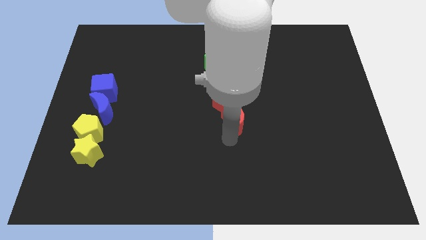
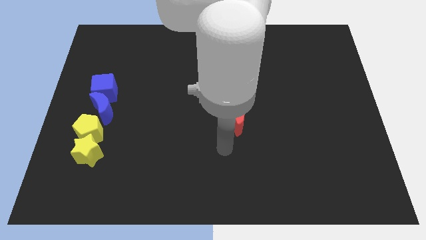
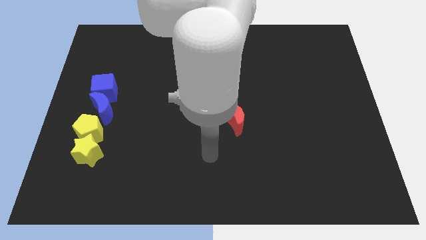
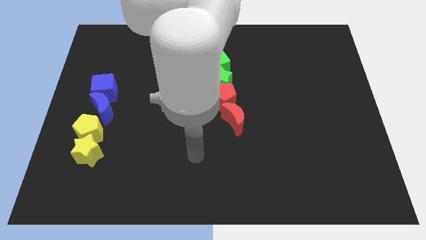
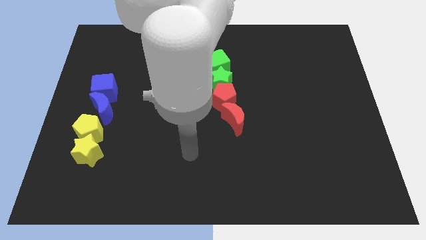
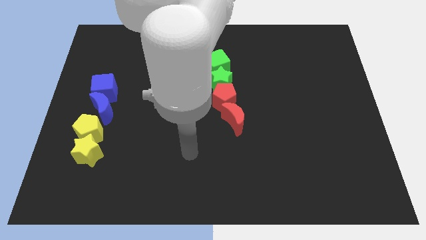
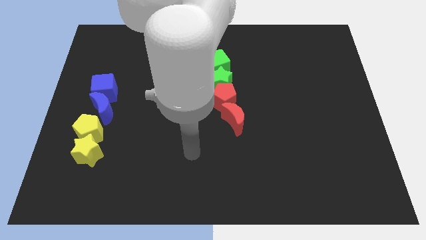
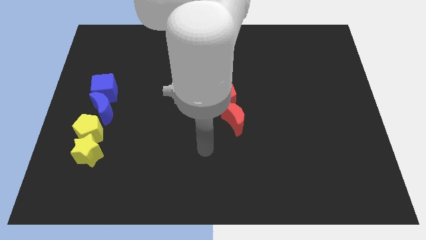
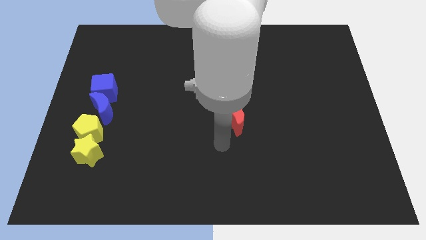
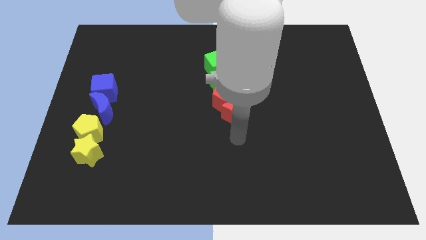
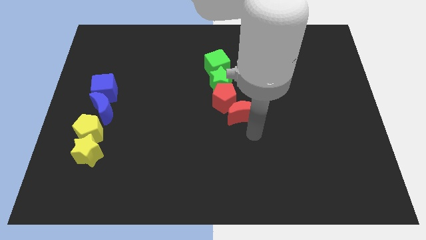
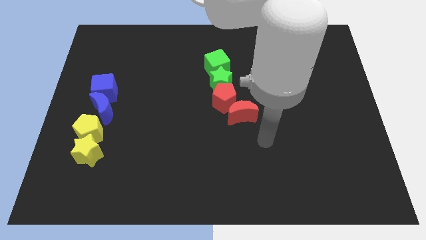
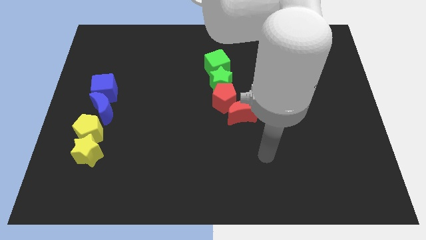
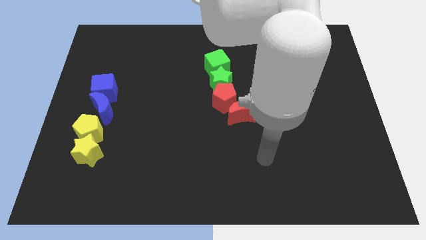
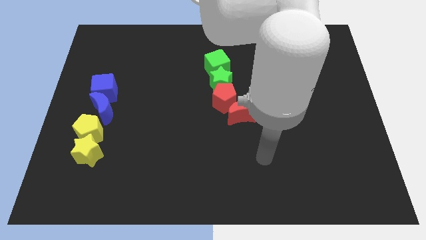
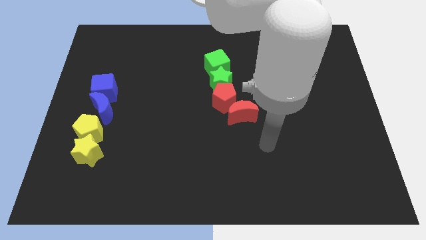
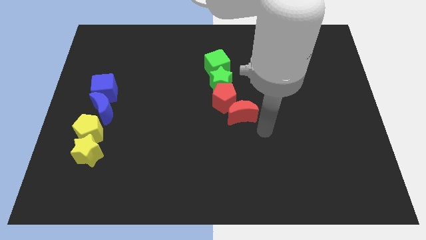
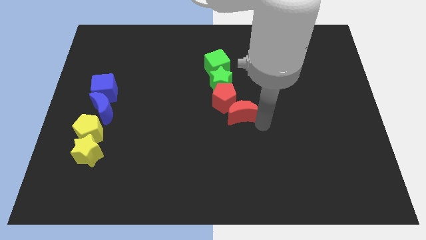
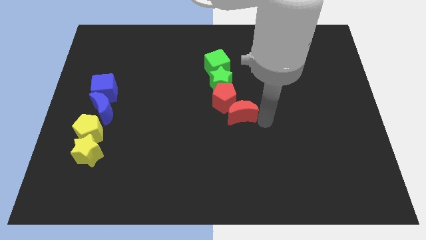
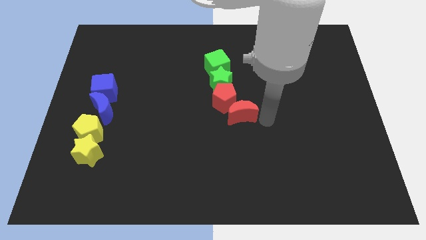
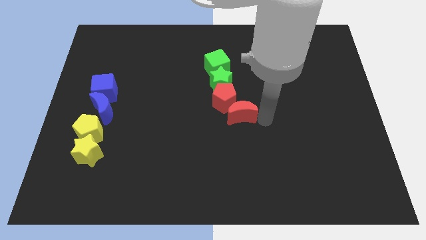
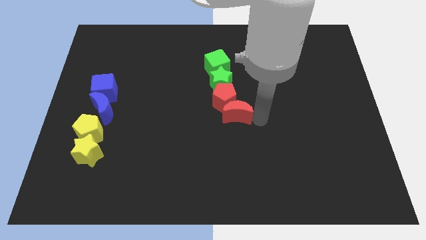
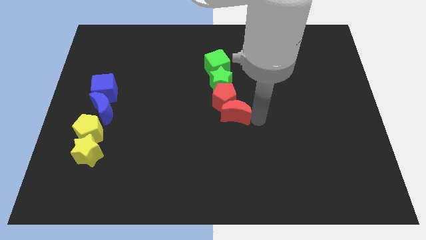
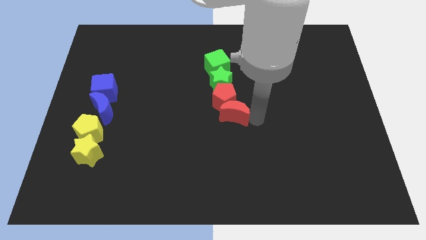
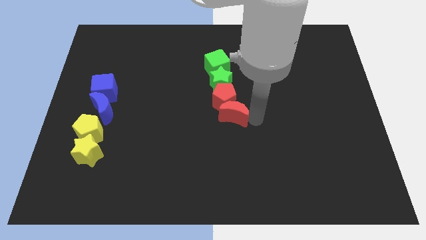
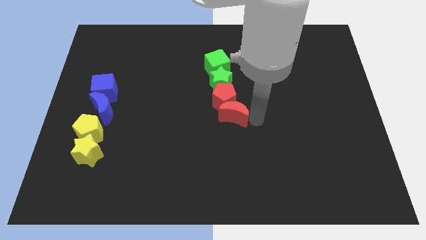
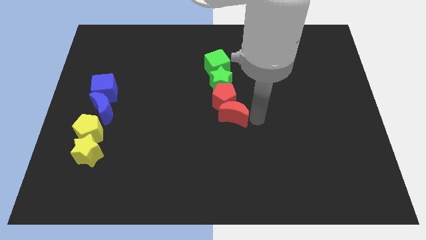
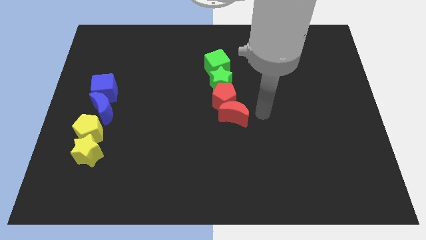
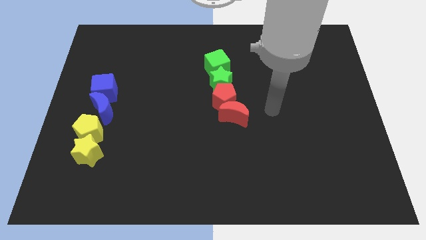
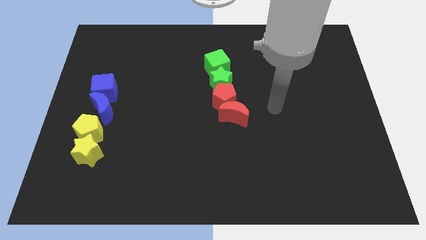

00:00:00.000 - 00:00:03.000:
adjust the red crescent diagonally to yellow star

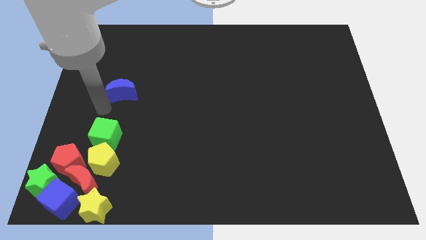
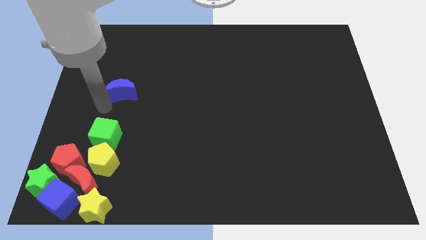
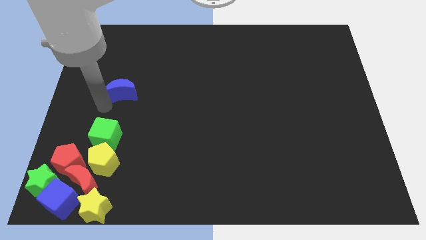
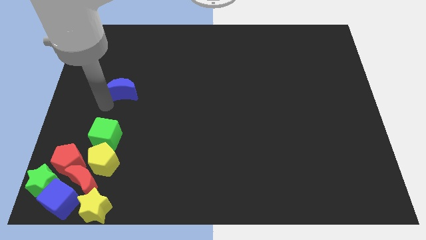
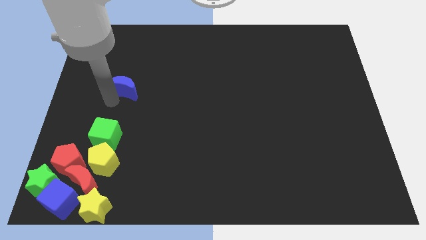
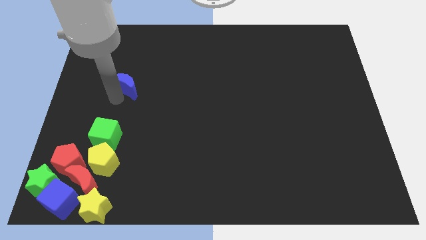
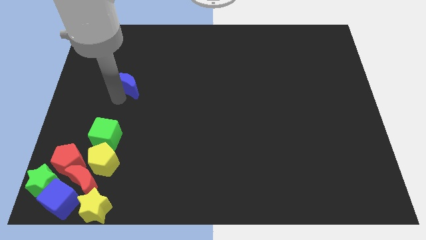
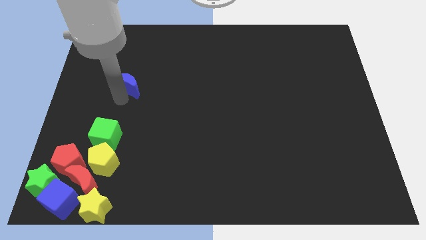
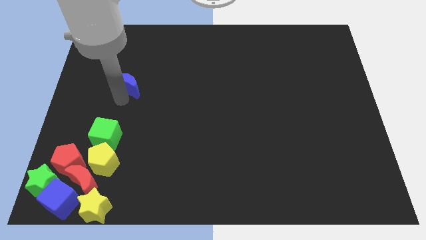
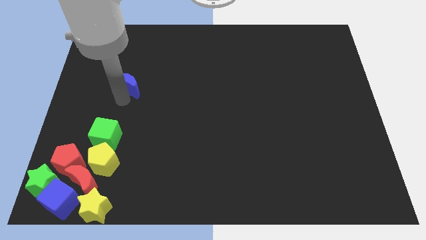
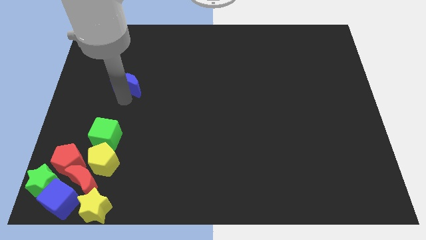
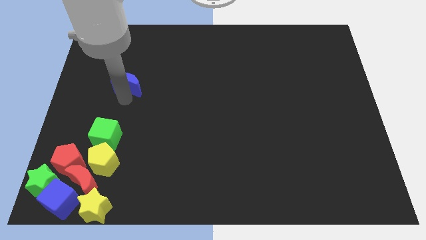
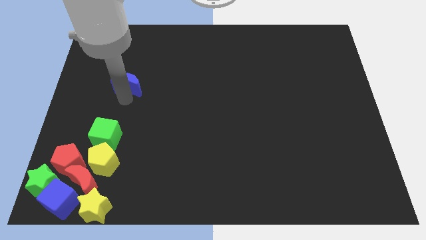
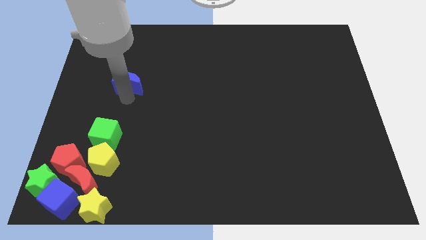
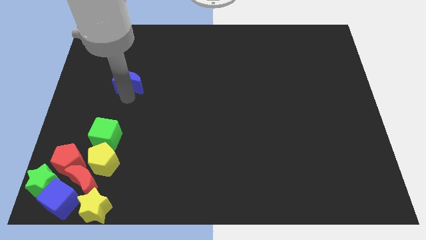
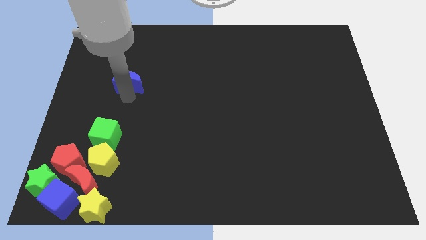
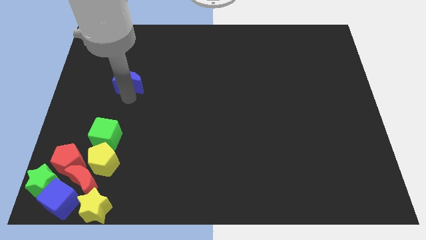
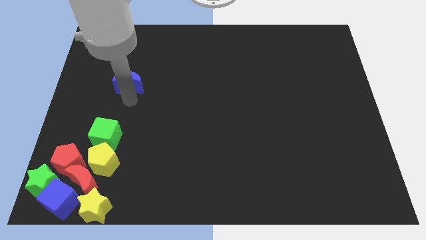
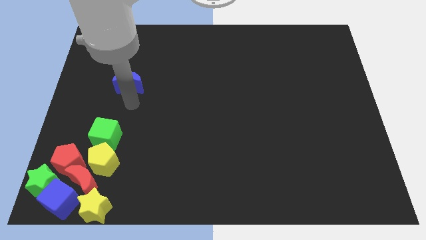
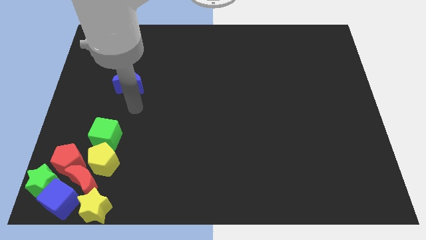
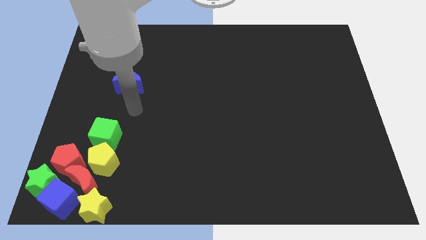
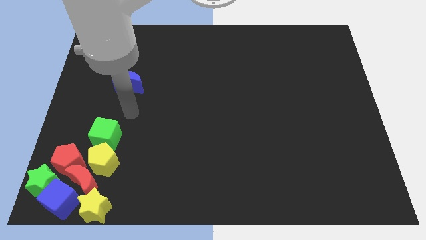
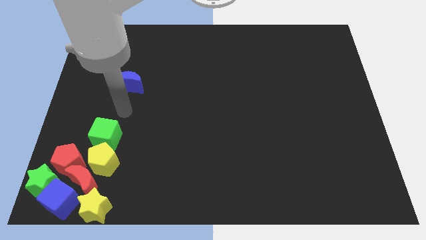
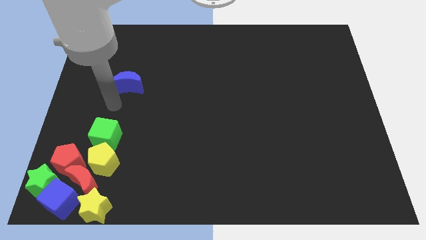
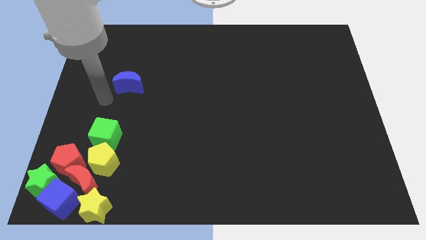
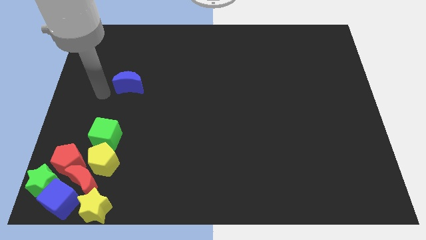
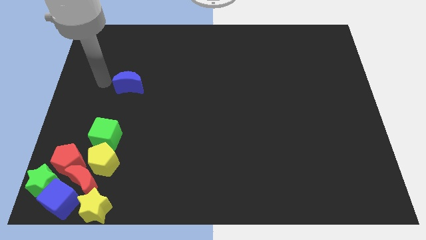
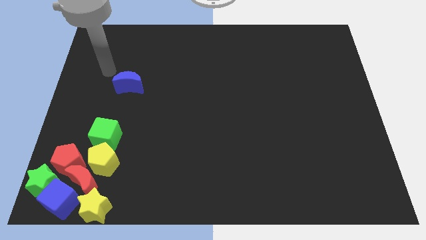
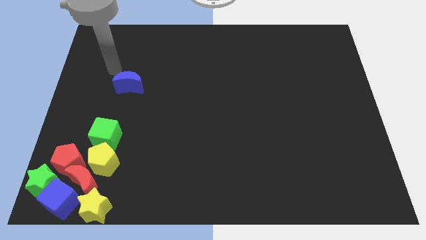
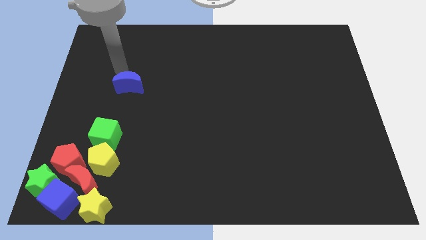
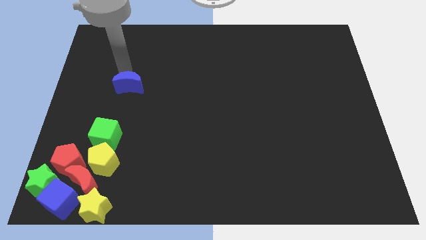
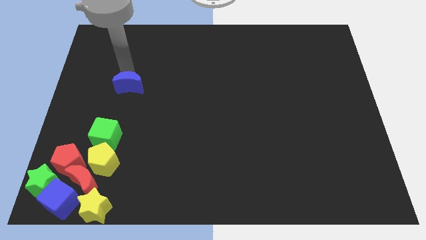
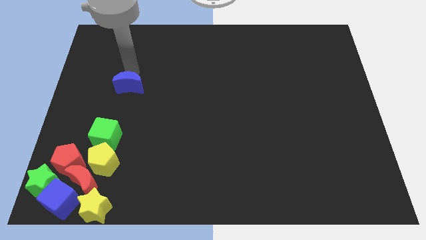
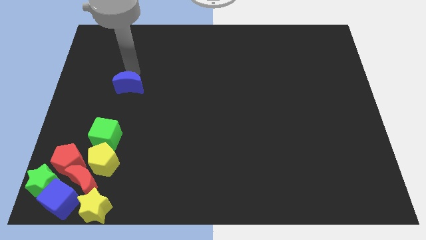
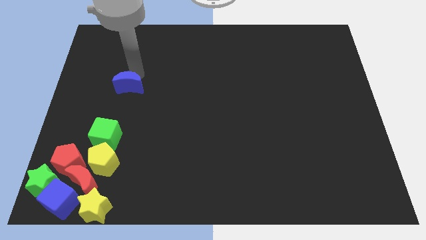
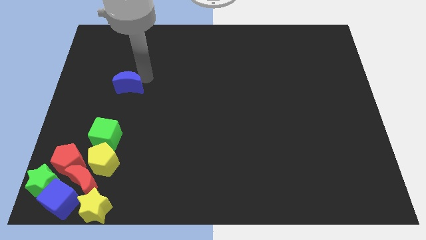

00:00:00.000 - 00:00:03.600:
place your arm above blue cube

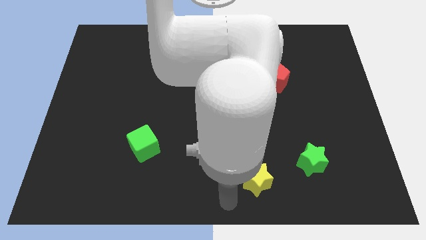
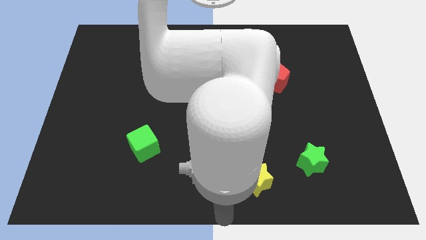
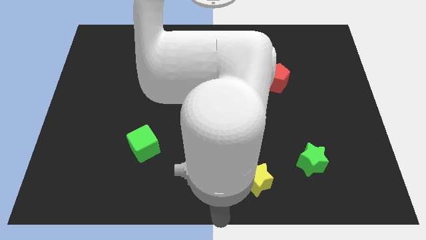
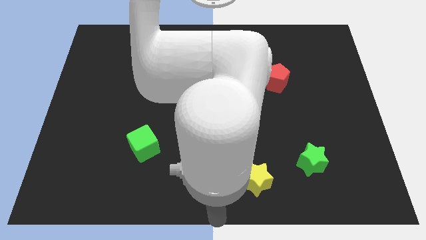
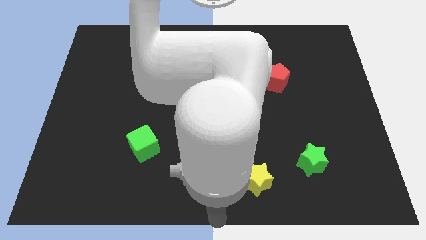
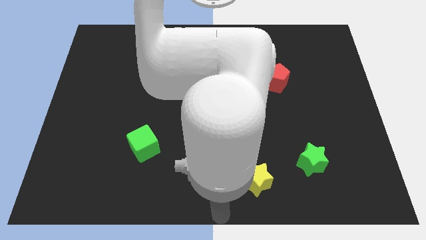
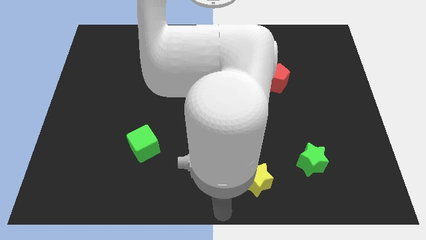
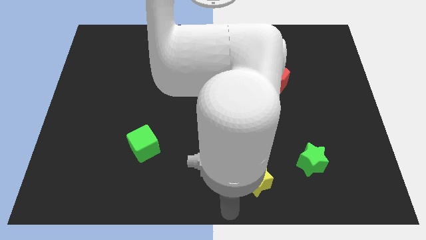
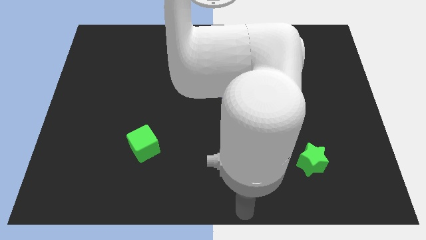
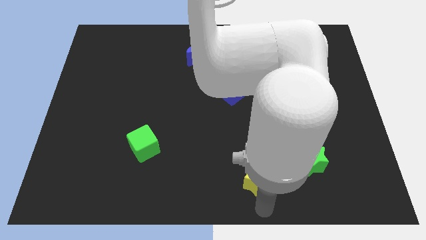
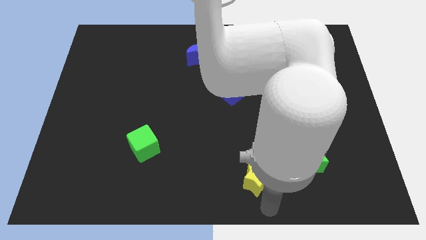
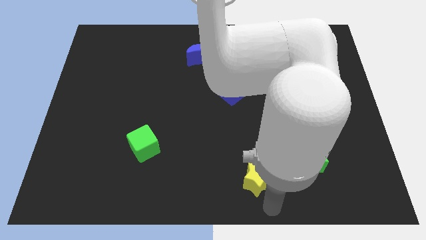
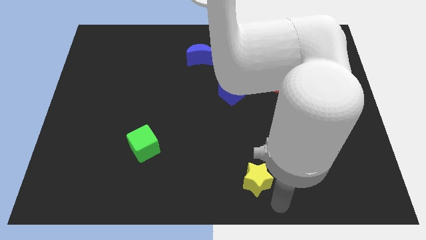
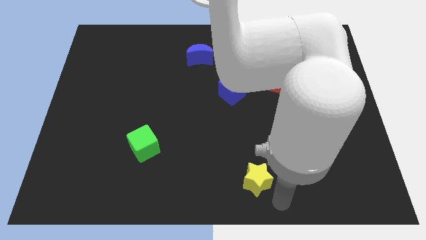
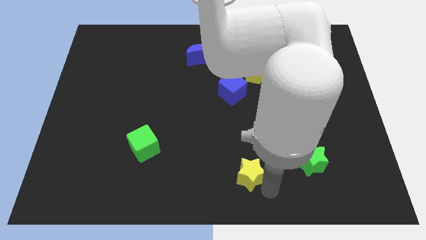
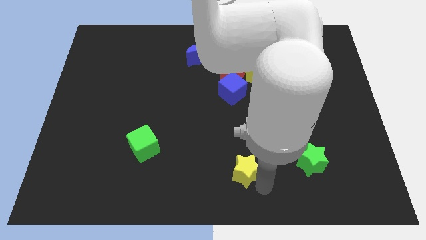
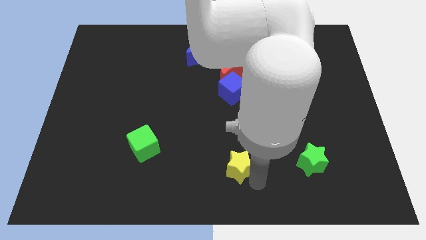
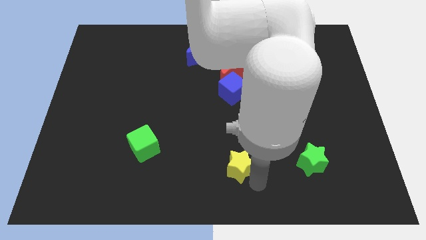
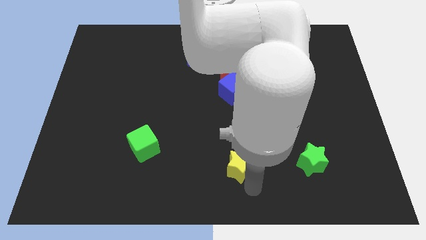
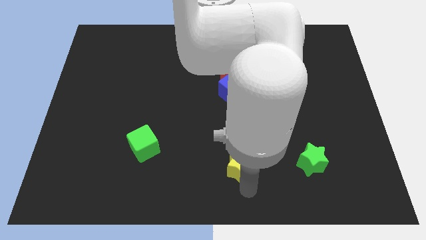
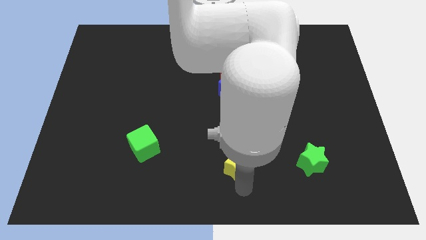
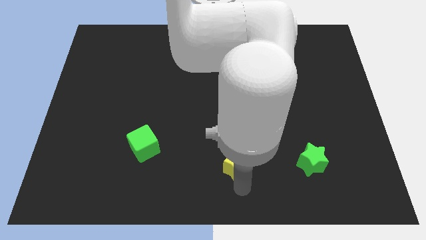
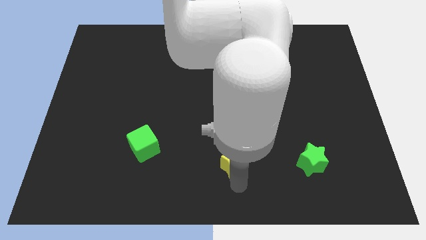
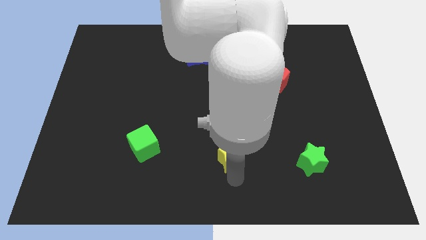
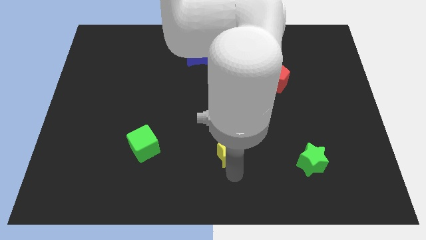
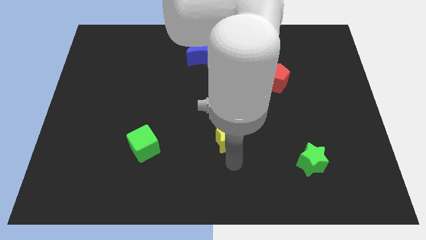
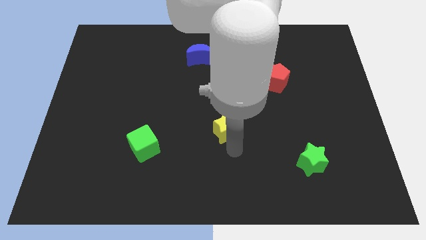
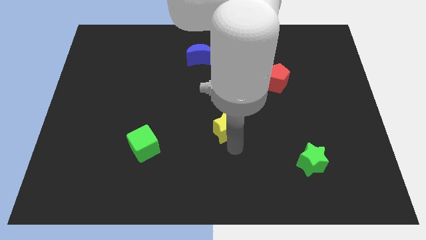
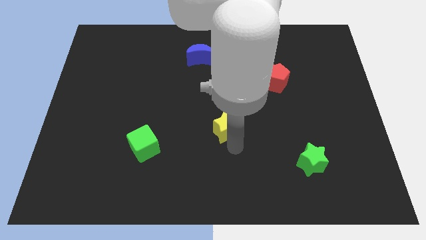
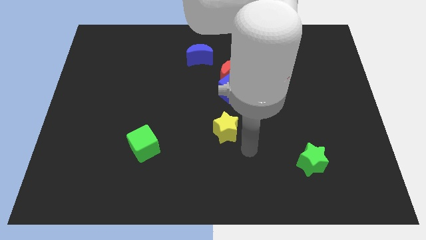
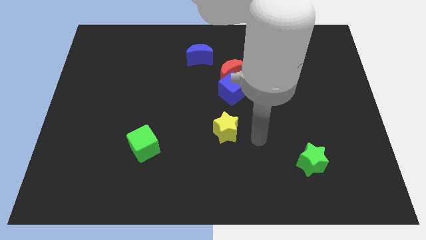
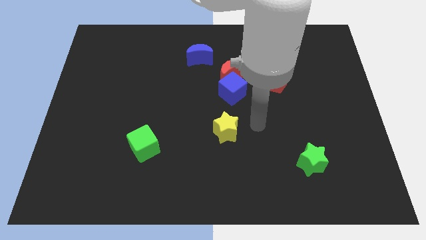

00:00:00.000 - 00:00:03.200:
slide the yellow star diagonally top left to the green star
